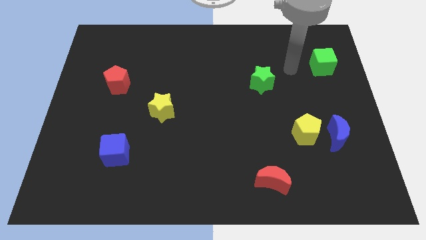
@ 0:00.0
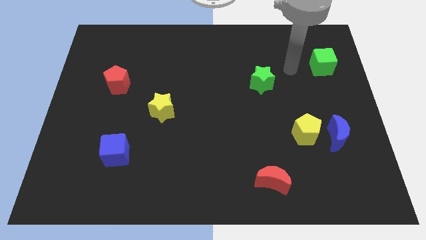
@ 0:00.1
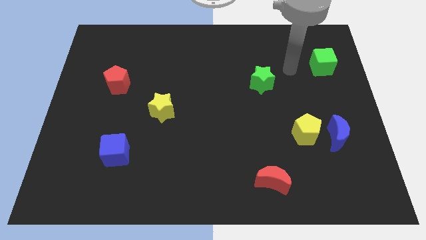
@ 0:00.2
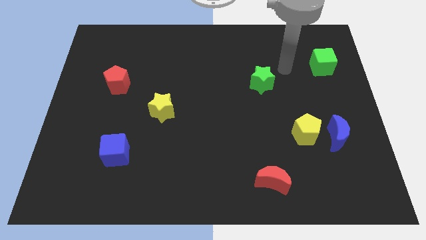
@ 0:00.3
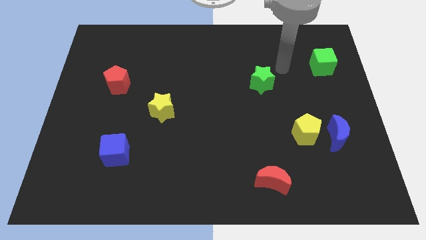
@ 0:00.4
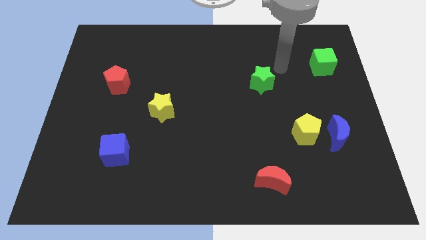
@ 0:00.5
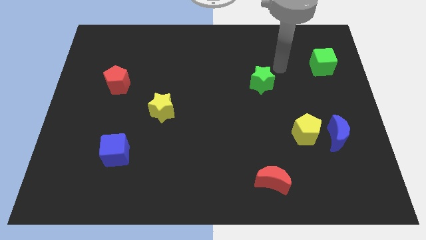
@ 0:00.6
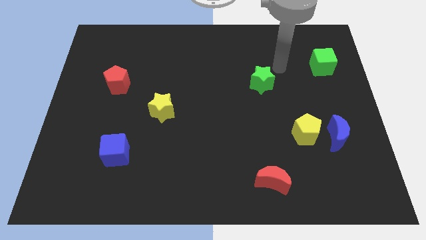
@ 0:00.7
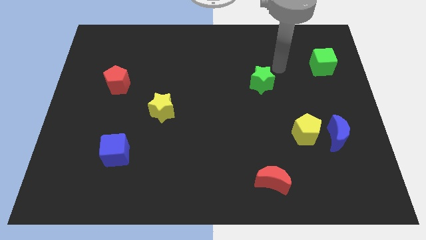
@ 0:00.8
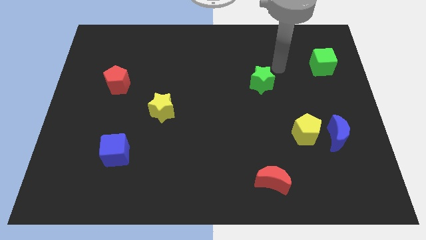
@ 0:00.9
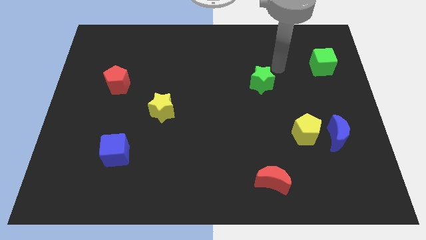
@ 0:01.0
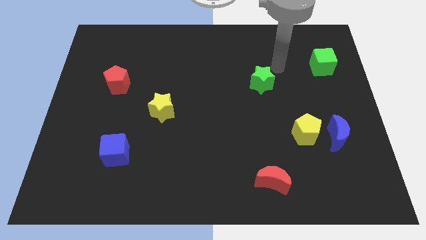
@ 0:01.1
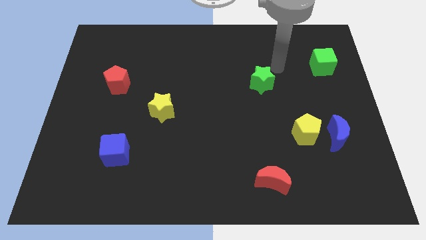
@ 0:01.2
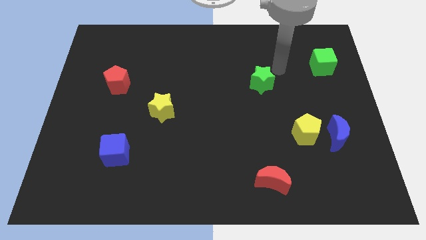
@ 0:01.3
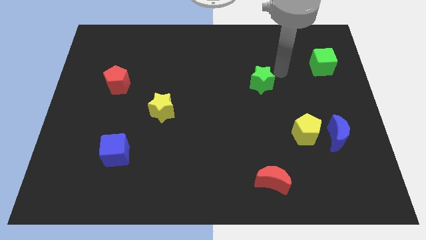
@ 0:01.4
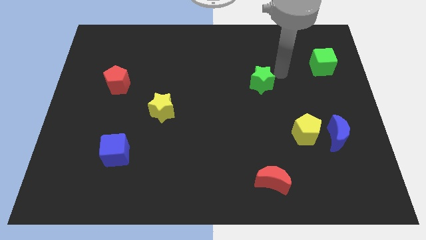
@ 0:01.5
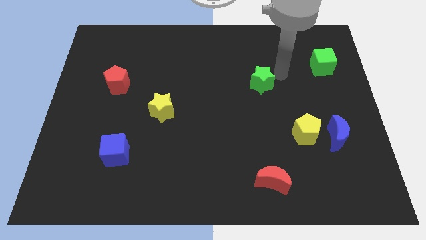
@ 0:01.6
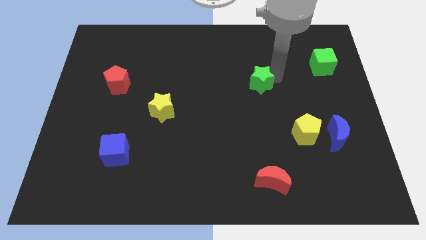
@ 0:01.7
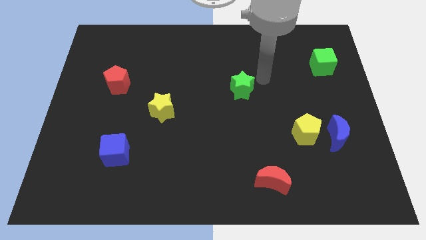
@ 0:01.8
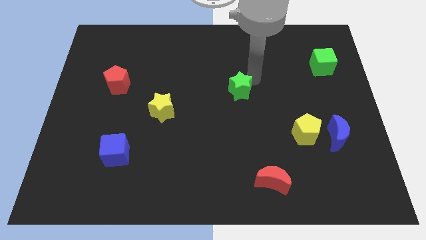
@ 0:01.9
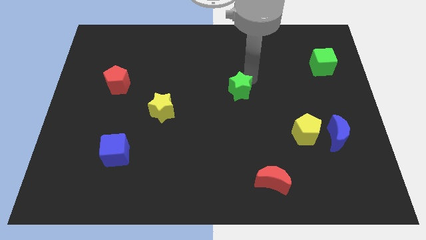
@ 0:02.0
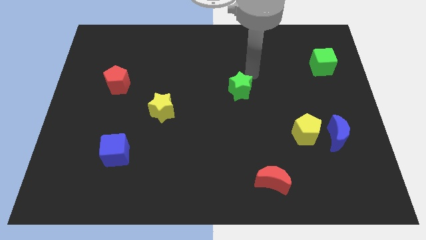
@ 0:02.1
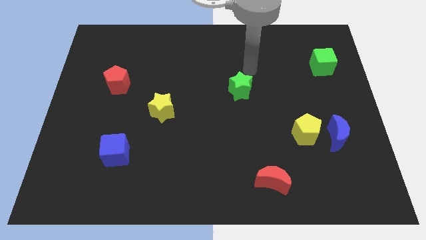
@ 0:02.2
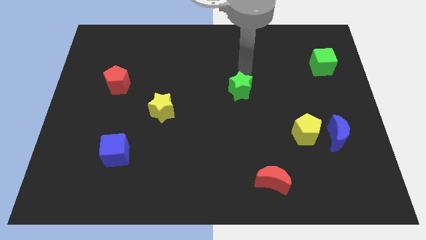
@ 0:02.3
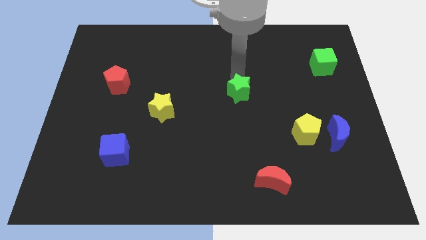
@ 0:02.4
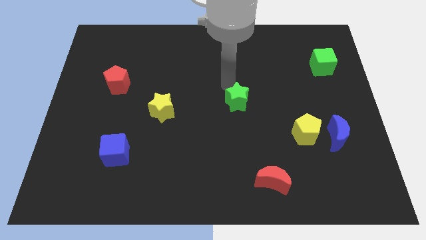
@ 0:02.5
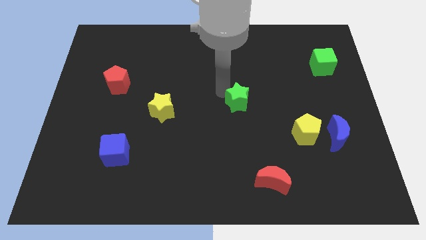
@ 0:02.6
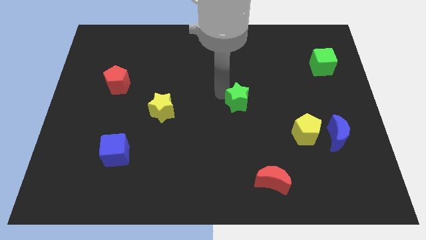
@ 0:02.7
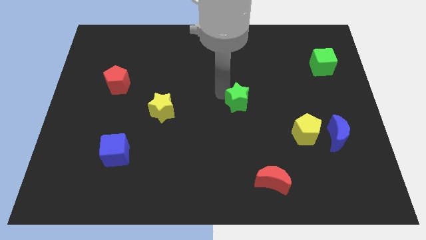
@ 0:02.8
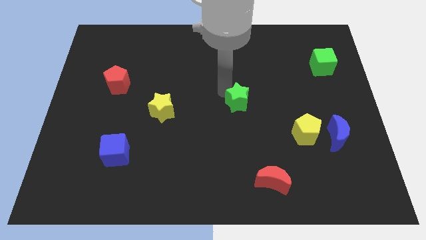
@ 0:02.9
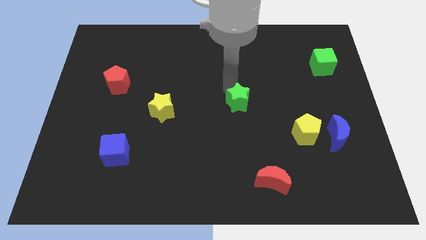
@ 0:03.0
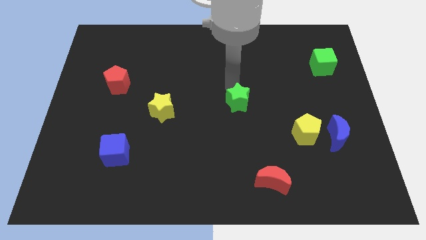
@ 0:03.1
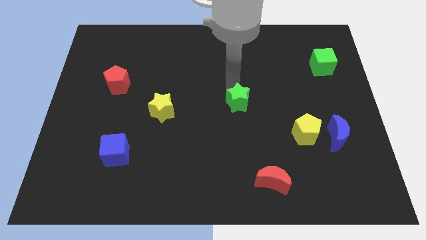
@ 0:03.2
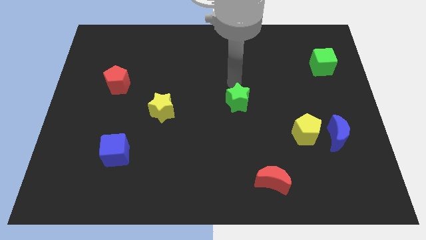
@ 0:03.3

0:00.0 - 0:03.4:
place the green star diagonally top left to the yellow pentagon

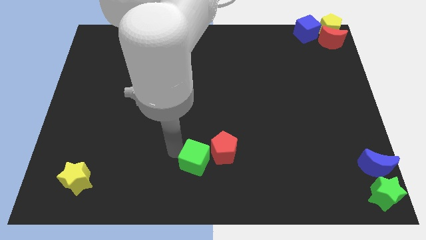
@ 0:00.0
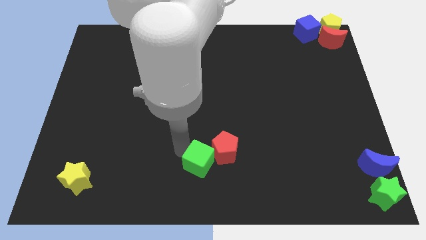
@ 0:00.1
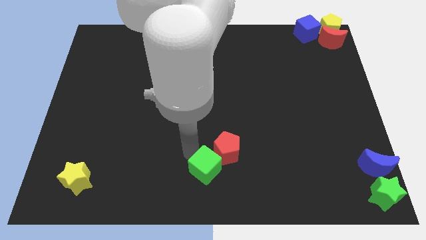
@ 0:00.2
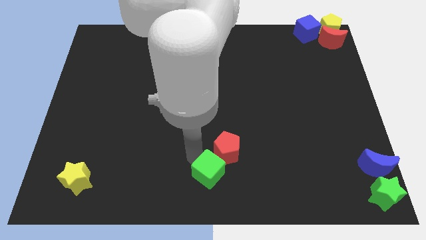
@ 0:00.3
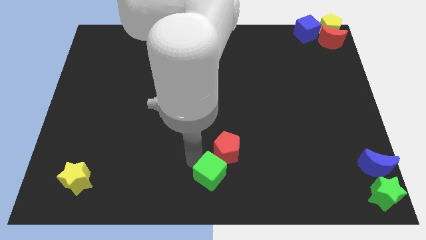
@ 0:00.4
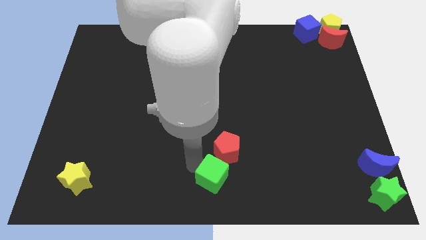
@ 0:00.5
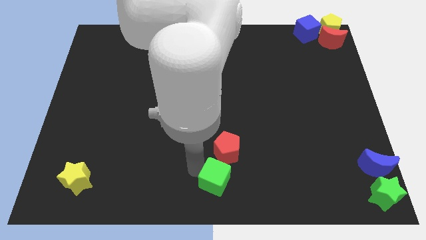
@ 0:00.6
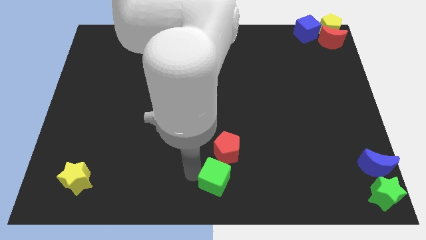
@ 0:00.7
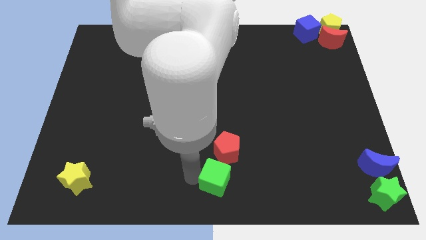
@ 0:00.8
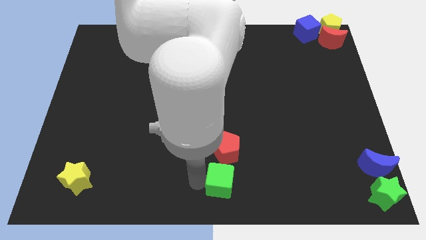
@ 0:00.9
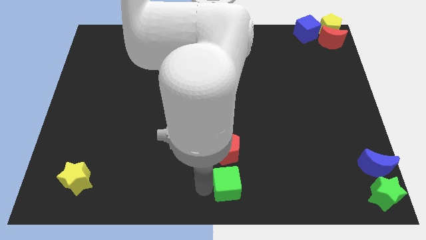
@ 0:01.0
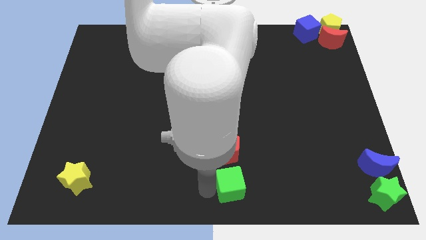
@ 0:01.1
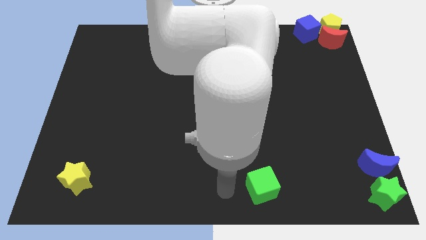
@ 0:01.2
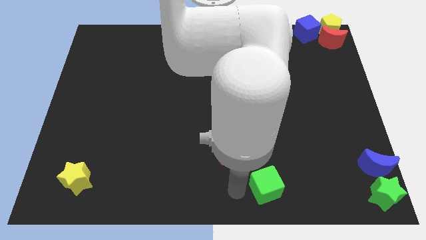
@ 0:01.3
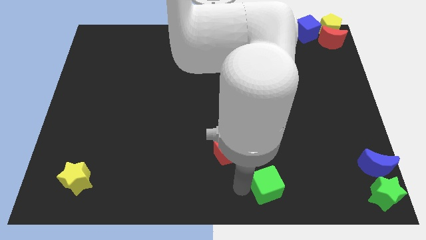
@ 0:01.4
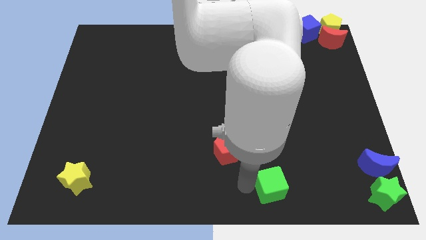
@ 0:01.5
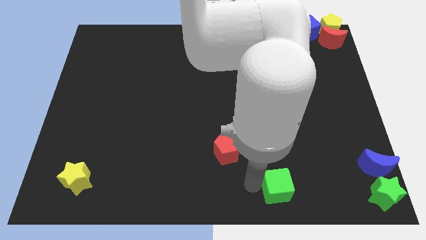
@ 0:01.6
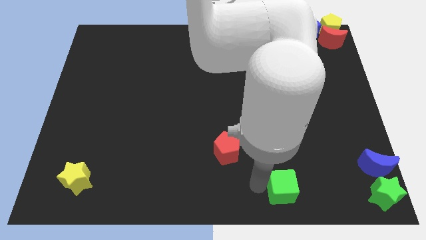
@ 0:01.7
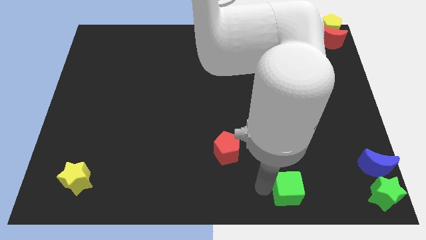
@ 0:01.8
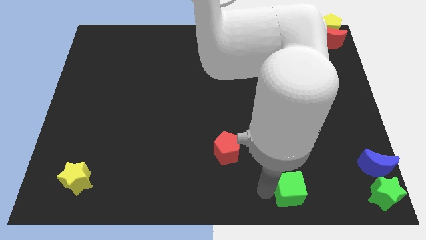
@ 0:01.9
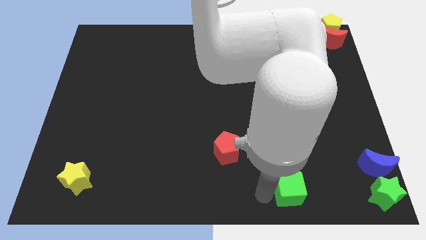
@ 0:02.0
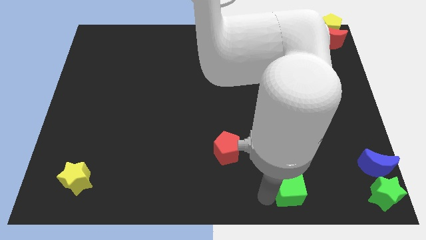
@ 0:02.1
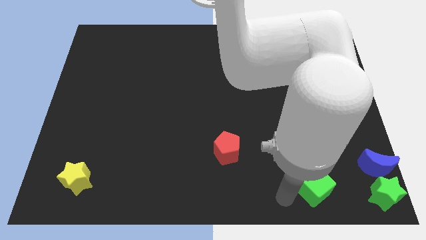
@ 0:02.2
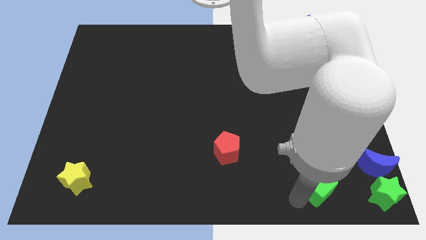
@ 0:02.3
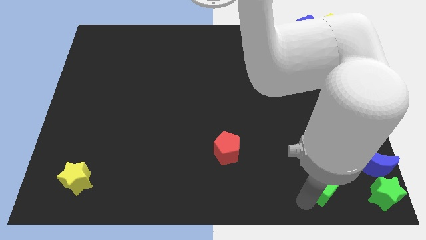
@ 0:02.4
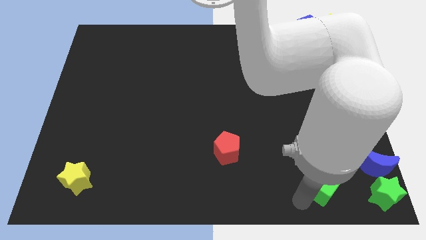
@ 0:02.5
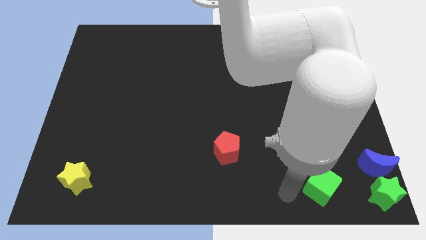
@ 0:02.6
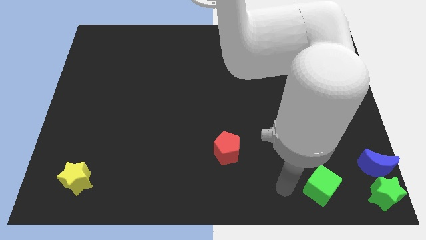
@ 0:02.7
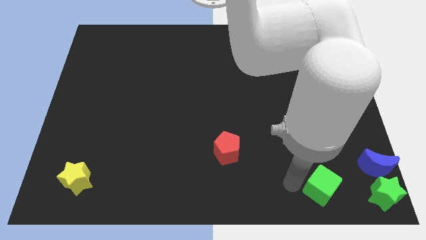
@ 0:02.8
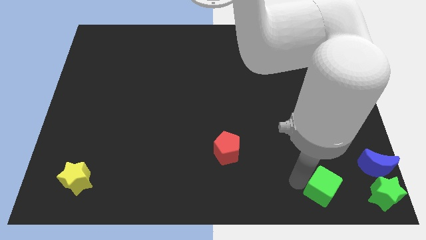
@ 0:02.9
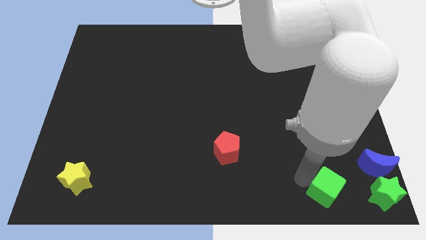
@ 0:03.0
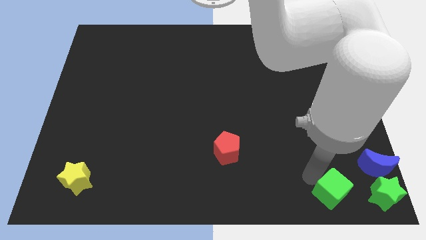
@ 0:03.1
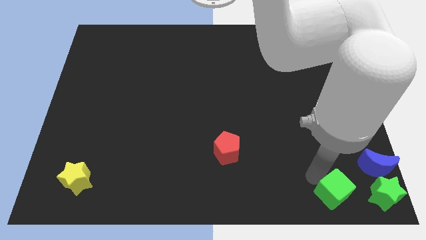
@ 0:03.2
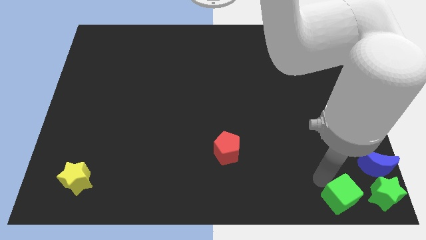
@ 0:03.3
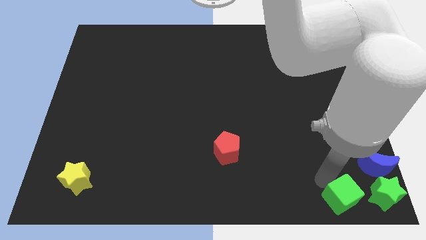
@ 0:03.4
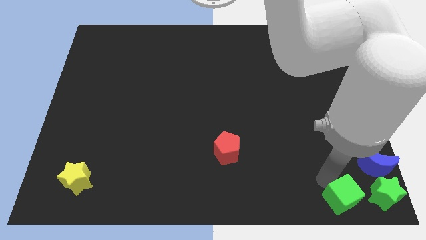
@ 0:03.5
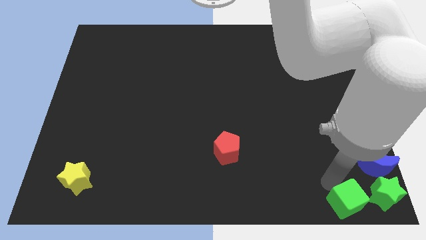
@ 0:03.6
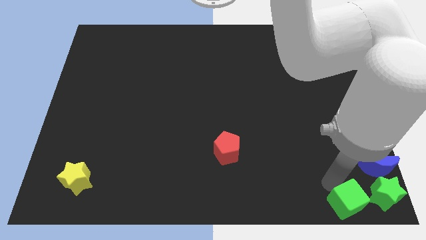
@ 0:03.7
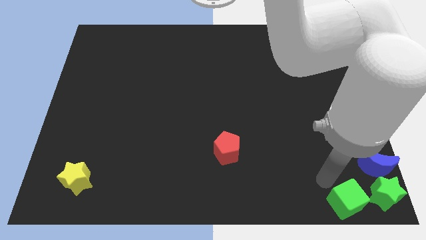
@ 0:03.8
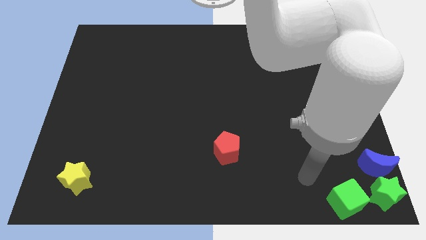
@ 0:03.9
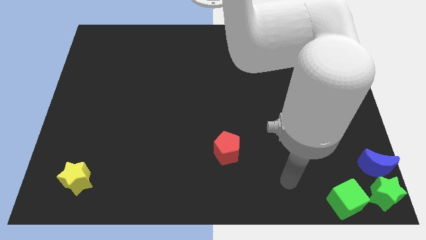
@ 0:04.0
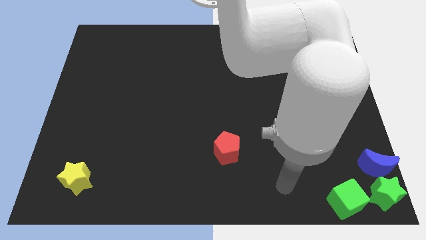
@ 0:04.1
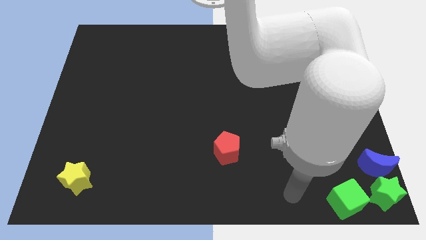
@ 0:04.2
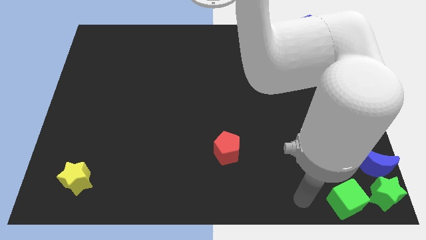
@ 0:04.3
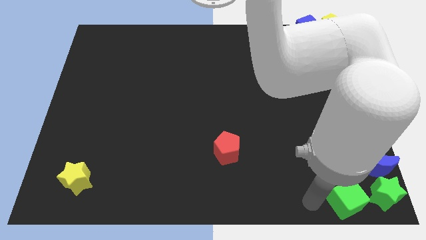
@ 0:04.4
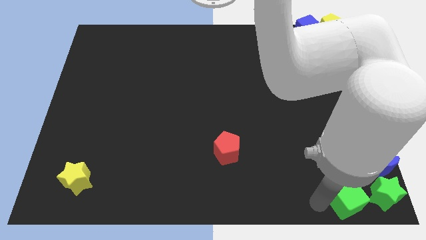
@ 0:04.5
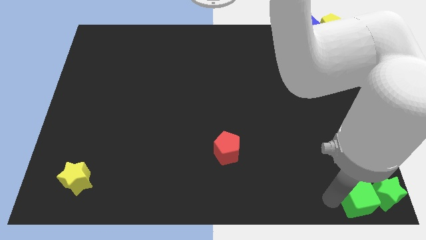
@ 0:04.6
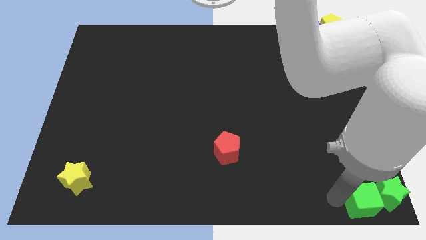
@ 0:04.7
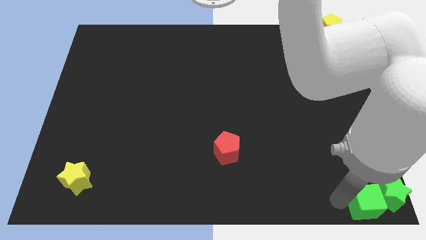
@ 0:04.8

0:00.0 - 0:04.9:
slide the green cube into the left side of the green star

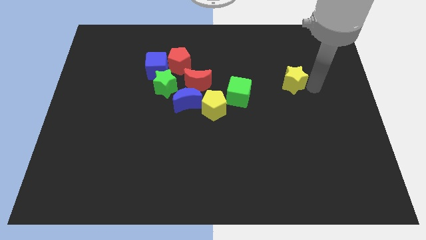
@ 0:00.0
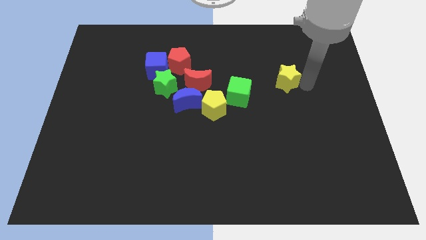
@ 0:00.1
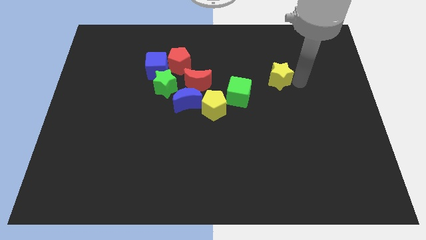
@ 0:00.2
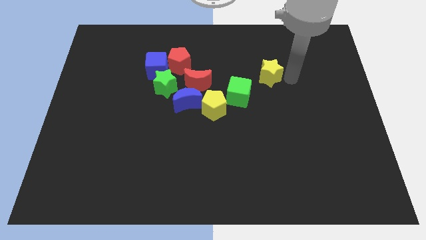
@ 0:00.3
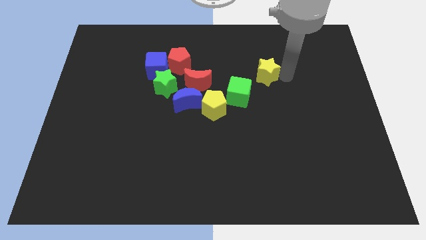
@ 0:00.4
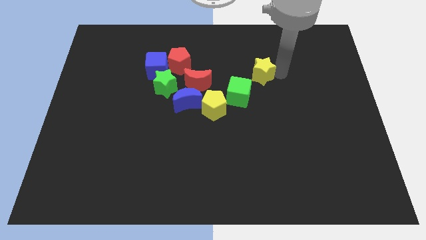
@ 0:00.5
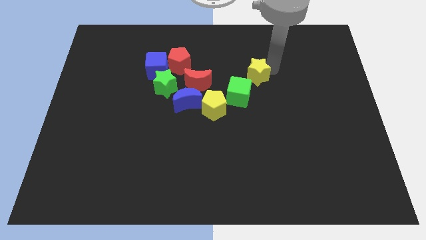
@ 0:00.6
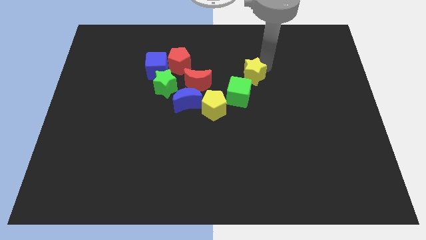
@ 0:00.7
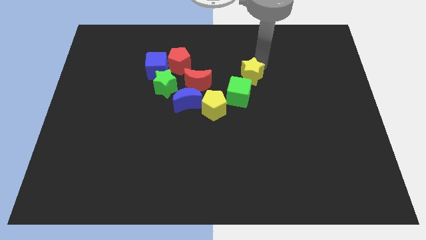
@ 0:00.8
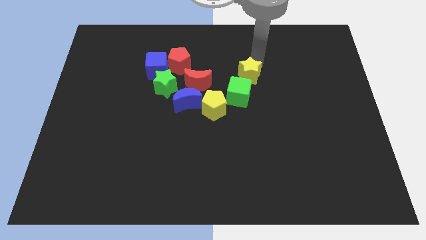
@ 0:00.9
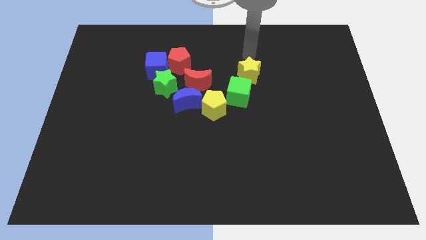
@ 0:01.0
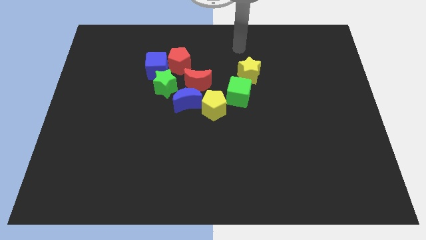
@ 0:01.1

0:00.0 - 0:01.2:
place the yellow star diagonally right green cube
